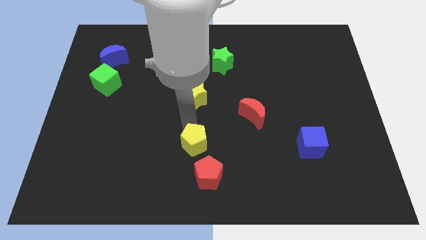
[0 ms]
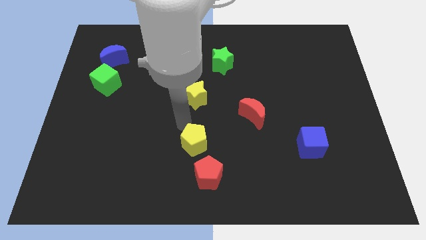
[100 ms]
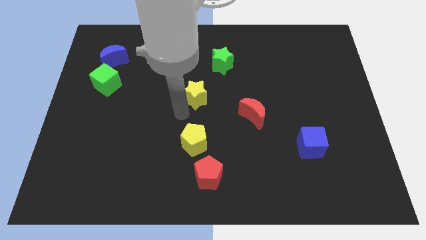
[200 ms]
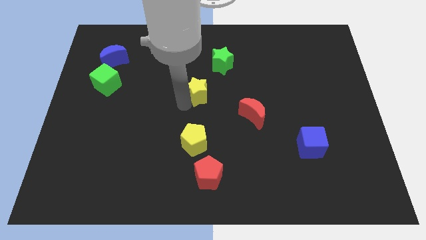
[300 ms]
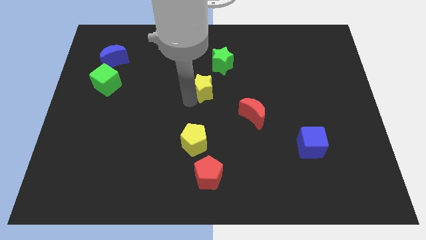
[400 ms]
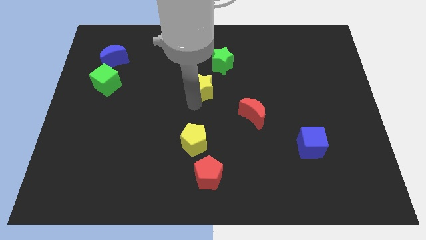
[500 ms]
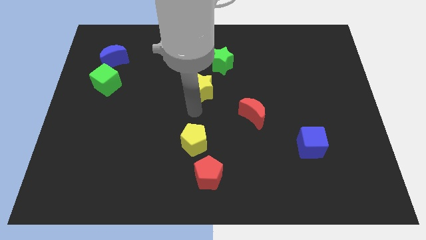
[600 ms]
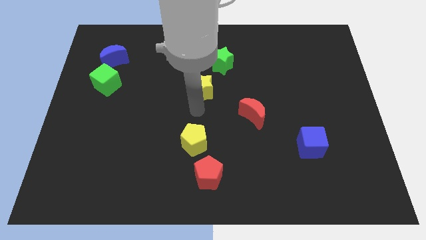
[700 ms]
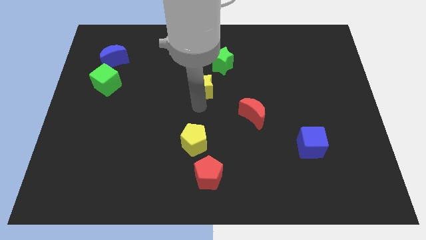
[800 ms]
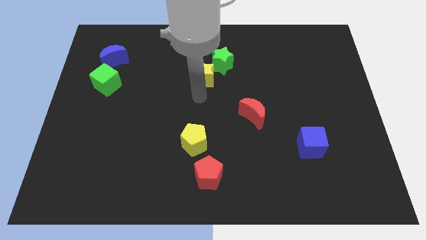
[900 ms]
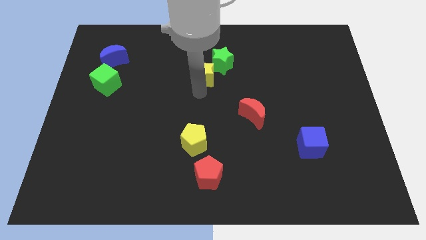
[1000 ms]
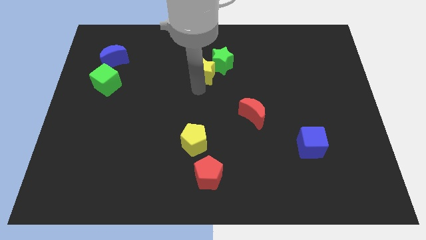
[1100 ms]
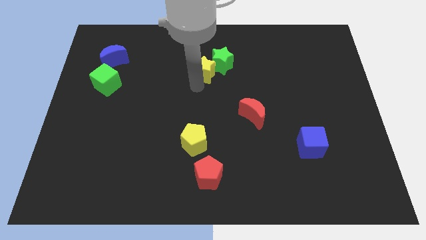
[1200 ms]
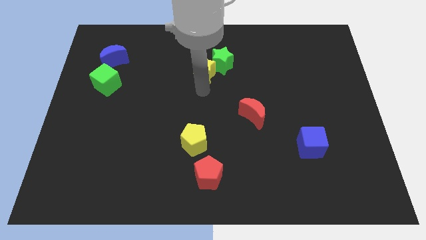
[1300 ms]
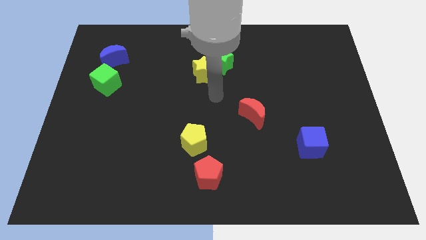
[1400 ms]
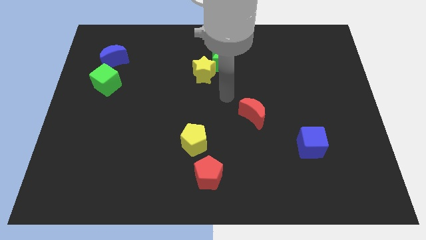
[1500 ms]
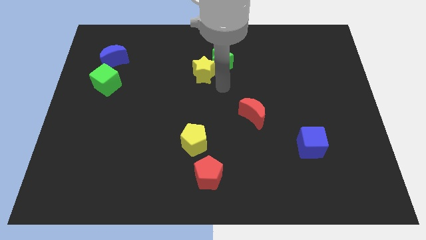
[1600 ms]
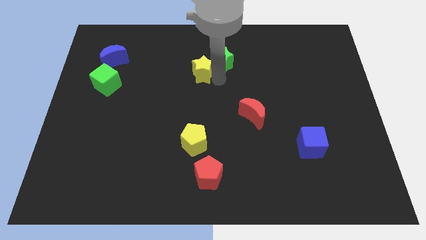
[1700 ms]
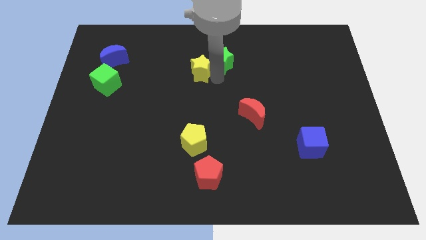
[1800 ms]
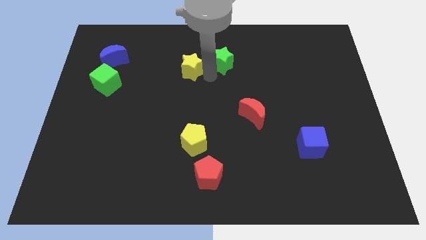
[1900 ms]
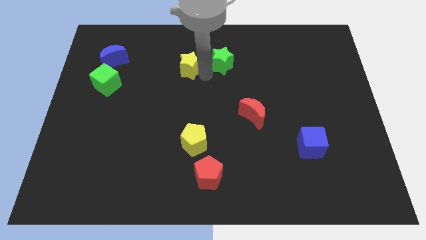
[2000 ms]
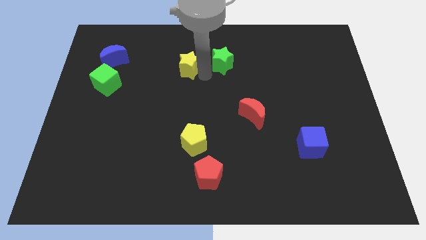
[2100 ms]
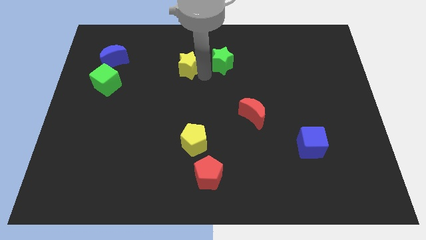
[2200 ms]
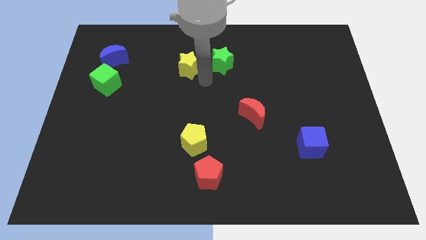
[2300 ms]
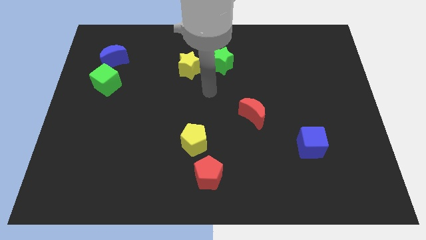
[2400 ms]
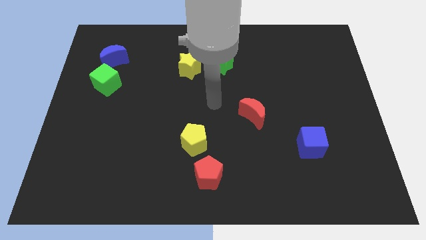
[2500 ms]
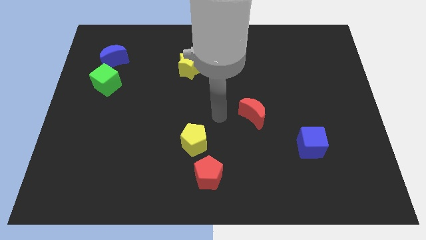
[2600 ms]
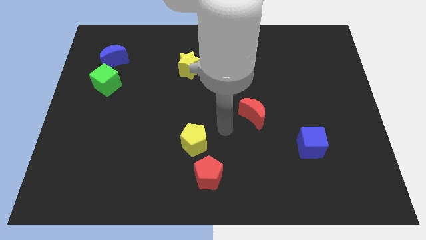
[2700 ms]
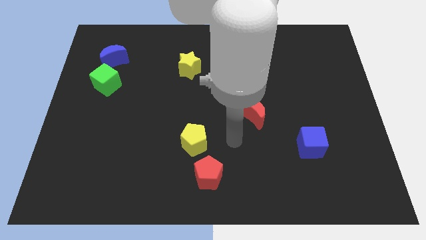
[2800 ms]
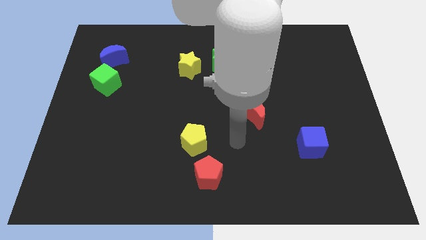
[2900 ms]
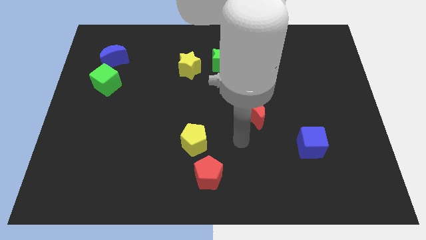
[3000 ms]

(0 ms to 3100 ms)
push the yellow star to the left of green star

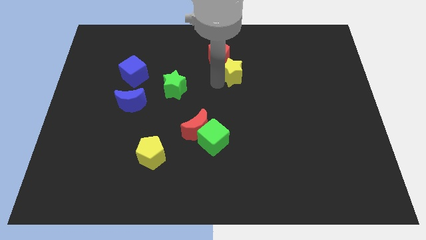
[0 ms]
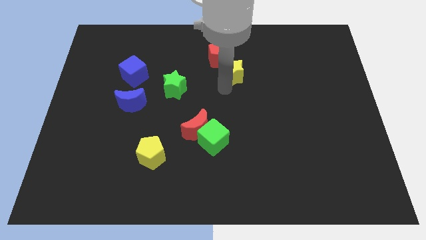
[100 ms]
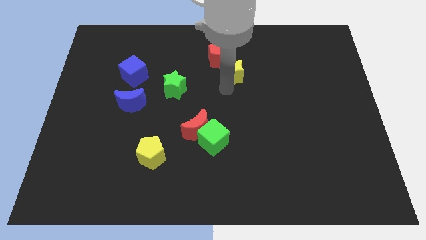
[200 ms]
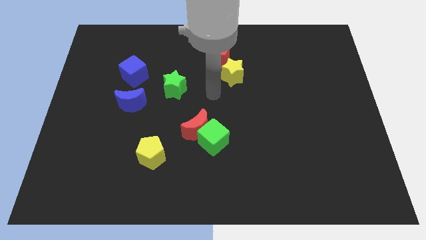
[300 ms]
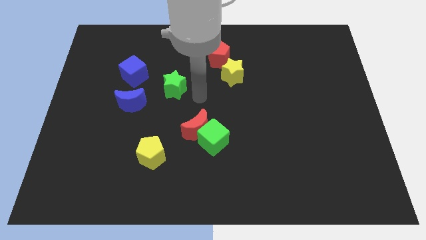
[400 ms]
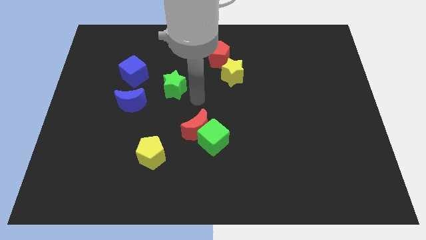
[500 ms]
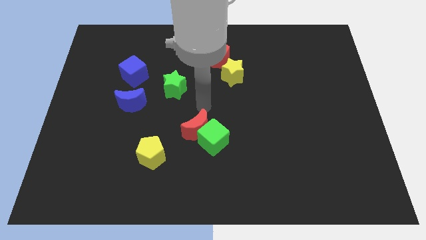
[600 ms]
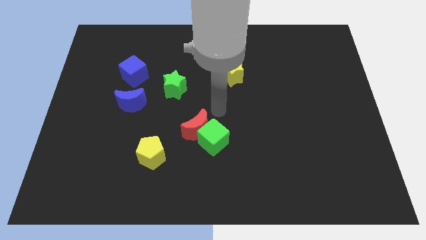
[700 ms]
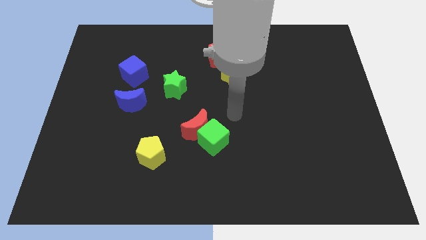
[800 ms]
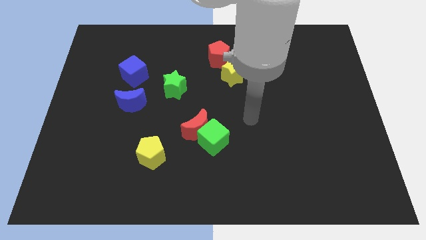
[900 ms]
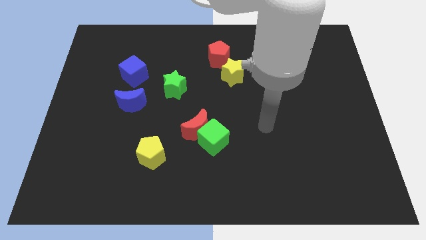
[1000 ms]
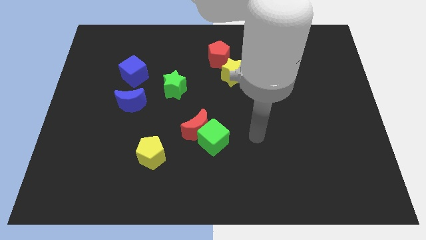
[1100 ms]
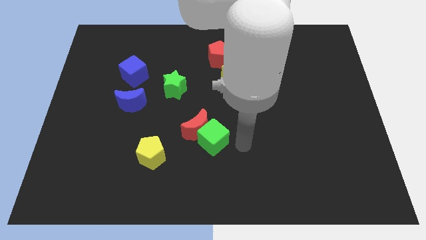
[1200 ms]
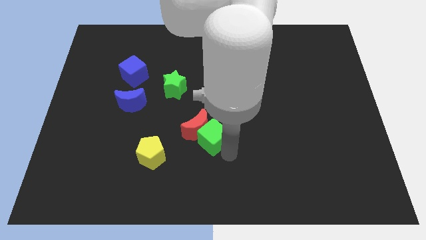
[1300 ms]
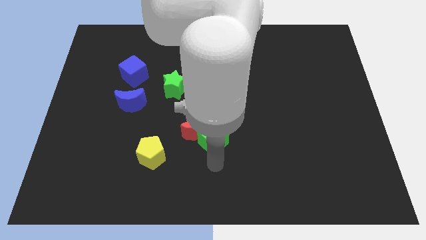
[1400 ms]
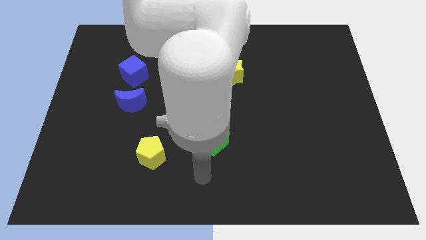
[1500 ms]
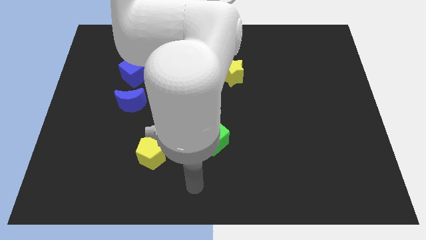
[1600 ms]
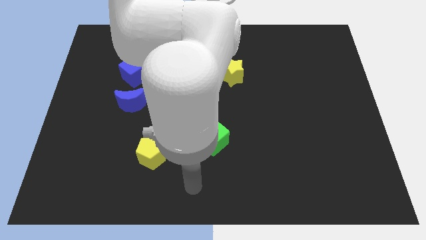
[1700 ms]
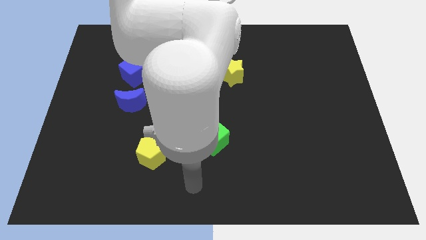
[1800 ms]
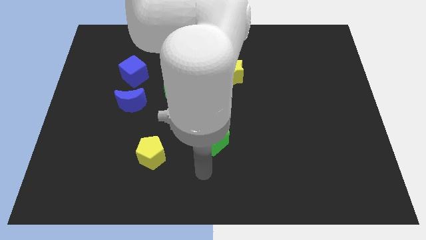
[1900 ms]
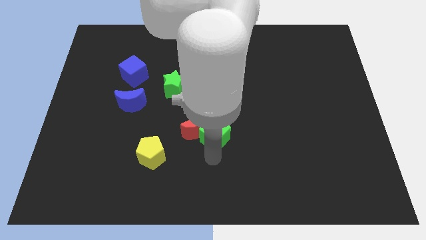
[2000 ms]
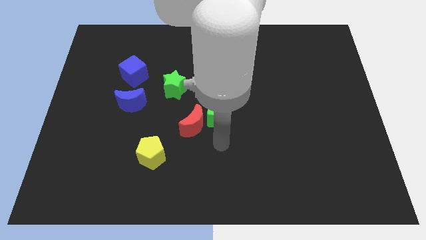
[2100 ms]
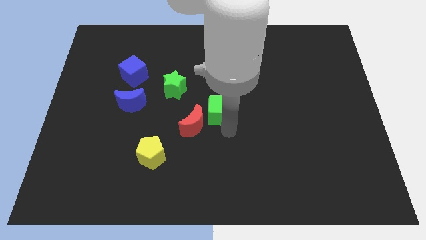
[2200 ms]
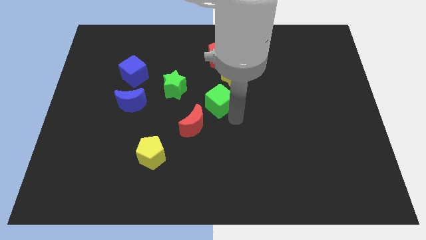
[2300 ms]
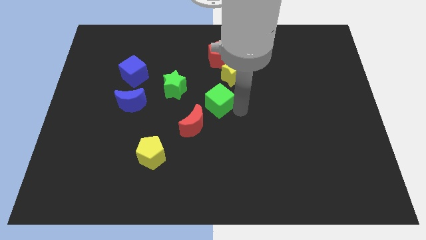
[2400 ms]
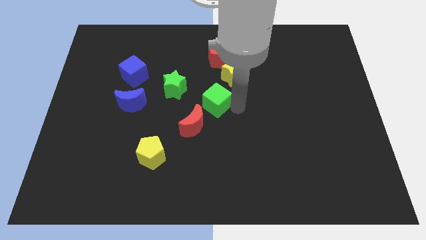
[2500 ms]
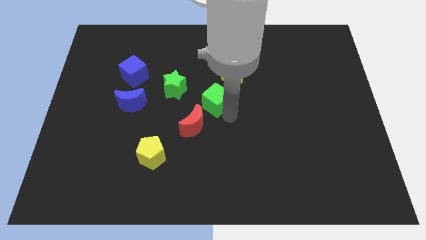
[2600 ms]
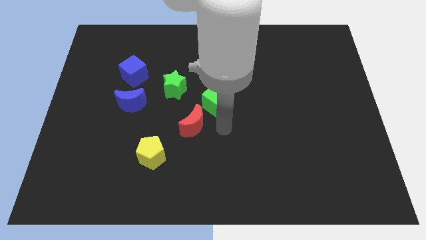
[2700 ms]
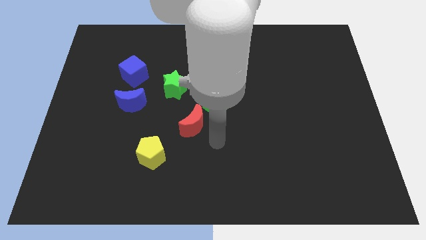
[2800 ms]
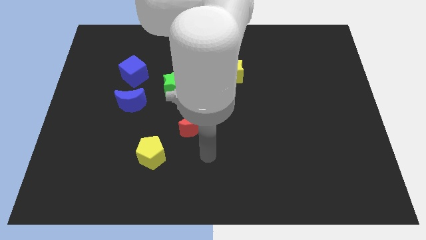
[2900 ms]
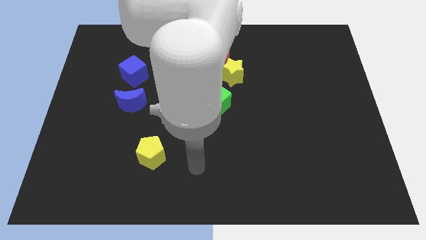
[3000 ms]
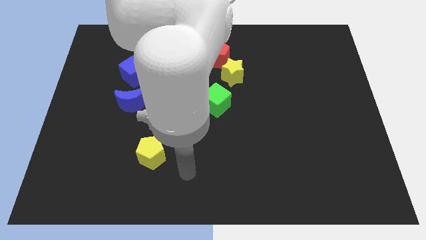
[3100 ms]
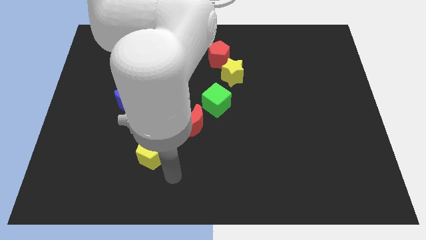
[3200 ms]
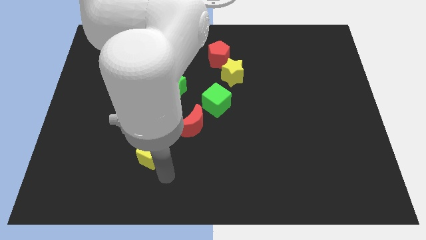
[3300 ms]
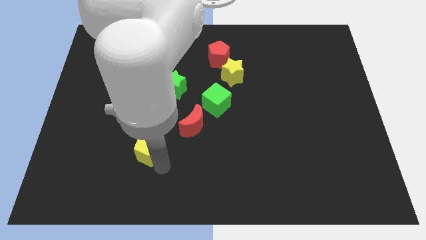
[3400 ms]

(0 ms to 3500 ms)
place the green cube diagonally top right to the red moon

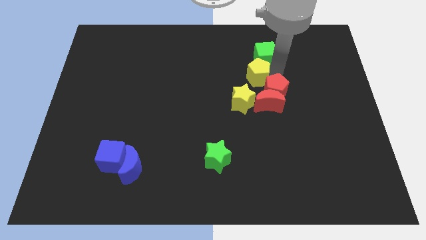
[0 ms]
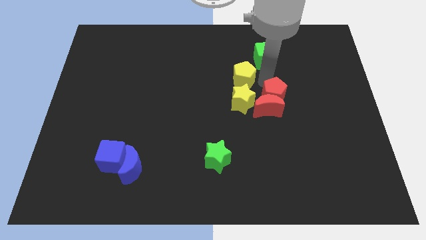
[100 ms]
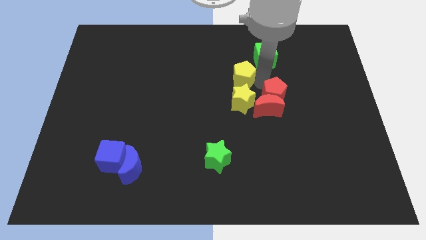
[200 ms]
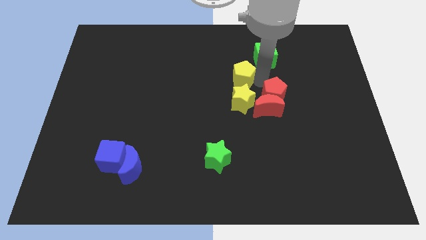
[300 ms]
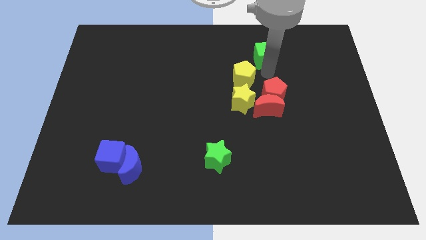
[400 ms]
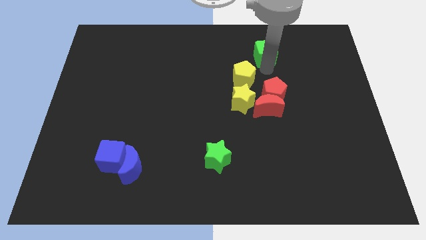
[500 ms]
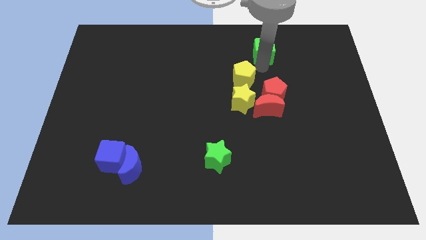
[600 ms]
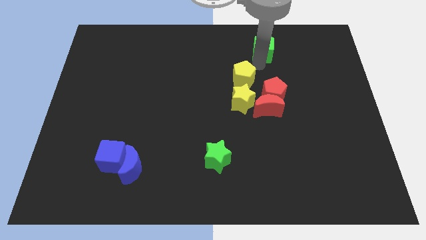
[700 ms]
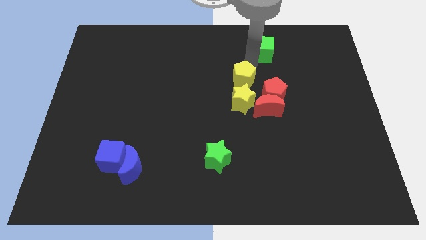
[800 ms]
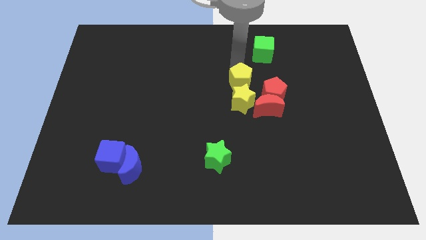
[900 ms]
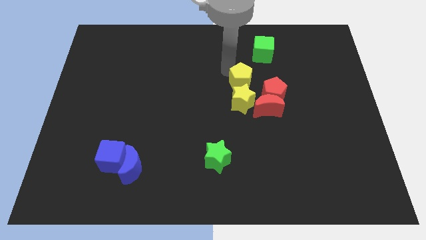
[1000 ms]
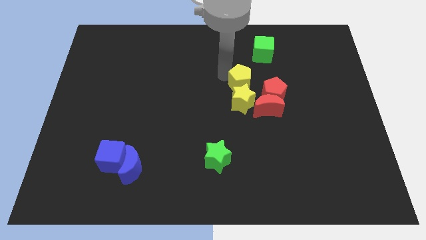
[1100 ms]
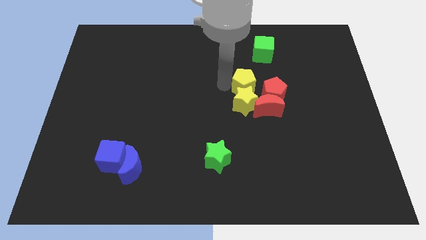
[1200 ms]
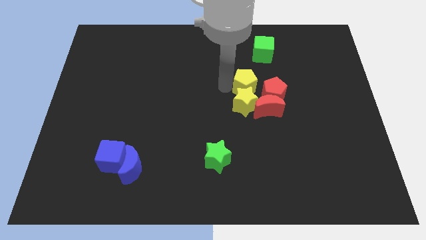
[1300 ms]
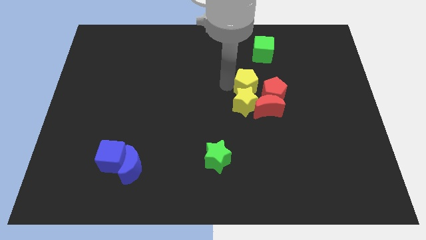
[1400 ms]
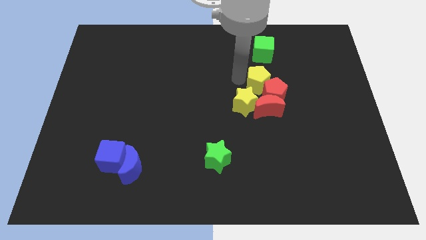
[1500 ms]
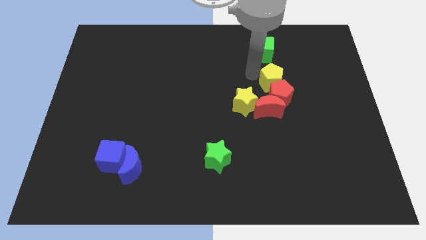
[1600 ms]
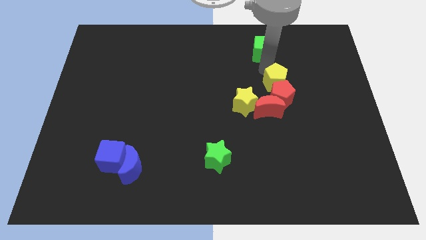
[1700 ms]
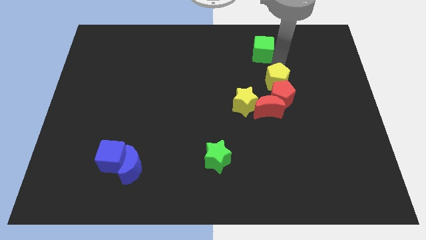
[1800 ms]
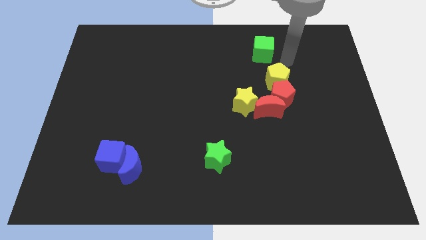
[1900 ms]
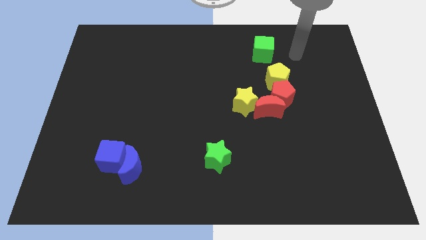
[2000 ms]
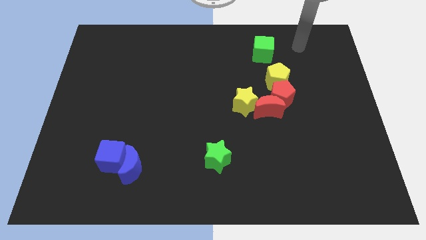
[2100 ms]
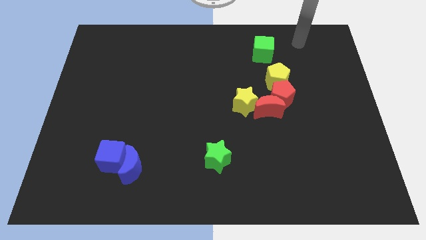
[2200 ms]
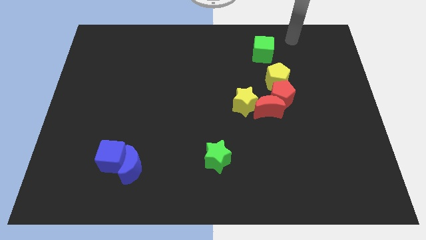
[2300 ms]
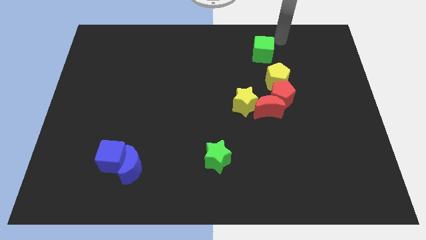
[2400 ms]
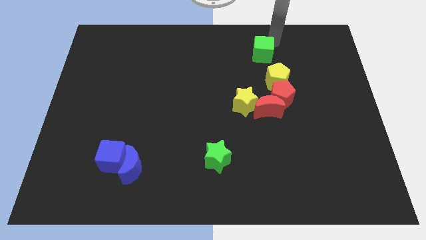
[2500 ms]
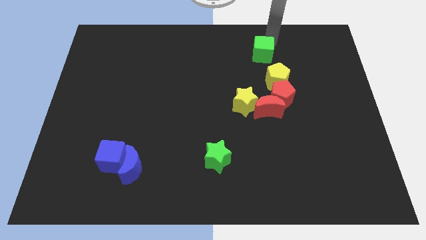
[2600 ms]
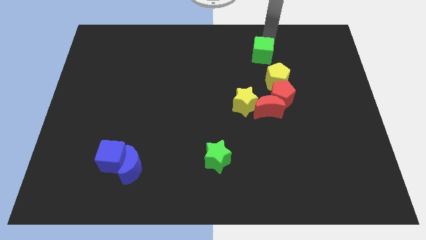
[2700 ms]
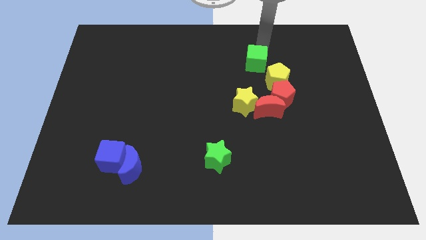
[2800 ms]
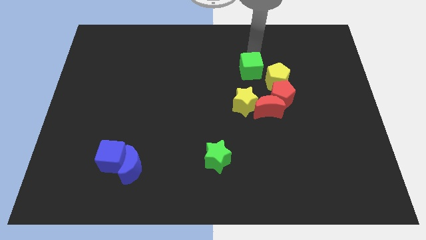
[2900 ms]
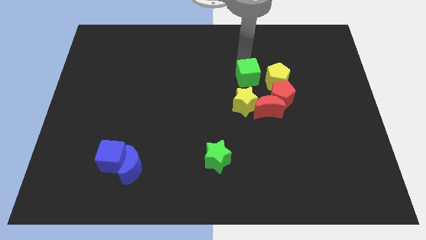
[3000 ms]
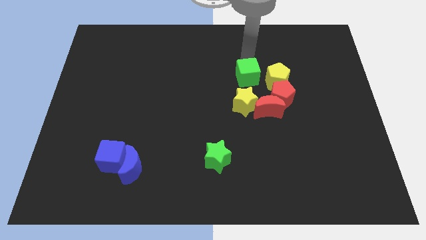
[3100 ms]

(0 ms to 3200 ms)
place green cube above yellow star
